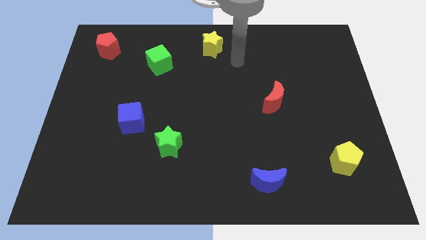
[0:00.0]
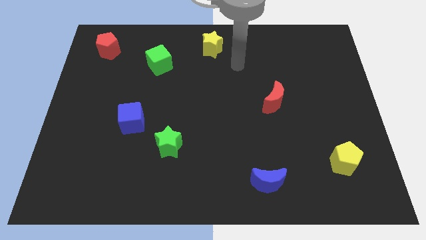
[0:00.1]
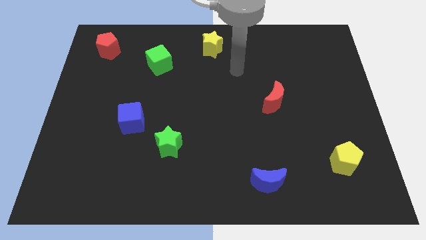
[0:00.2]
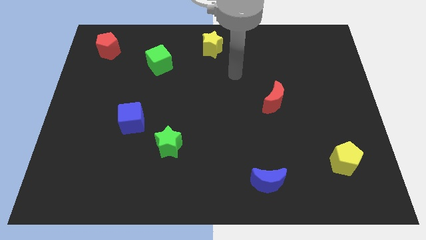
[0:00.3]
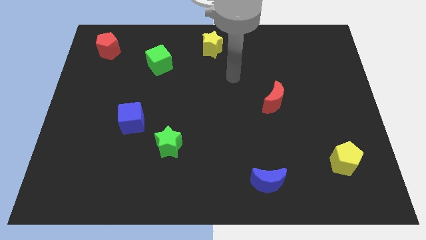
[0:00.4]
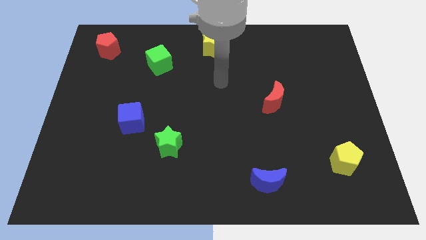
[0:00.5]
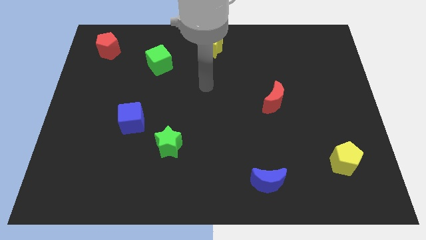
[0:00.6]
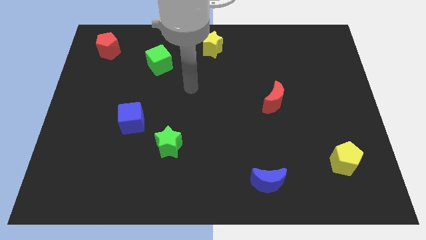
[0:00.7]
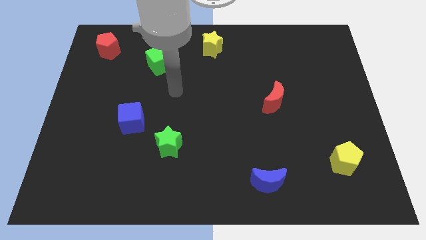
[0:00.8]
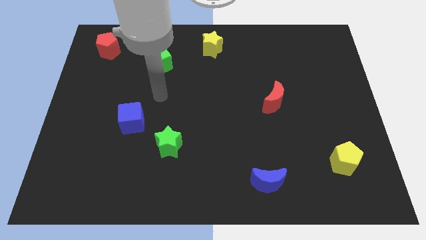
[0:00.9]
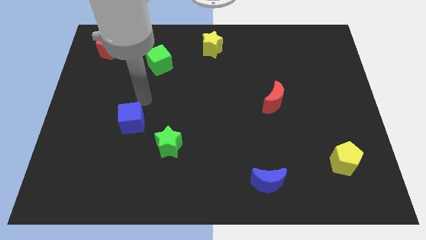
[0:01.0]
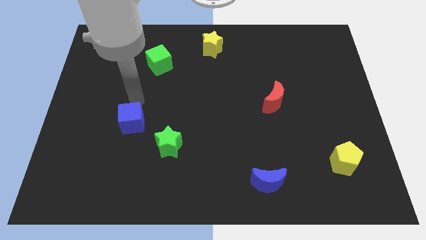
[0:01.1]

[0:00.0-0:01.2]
point the arm above the blue cube

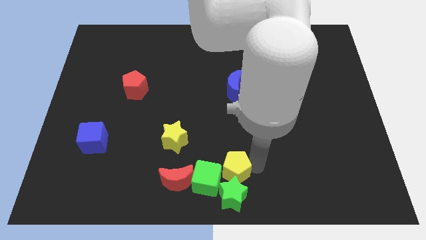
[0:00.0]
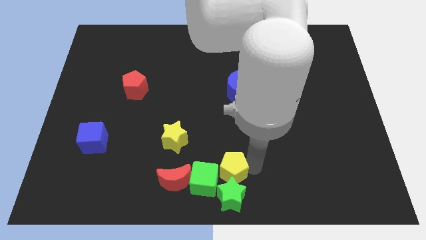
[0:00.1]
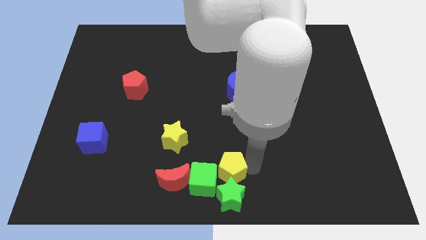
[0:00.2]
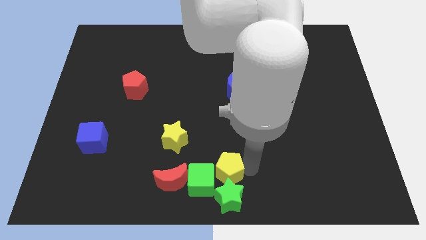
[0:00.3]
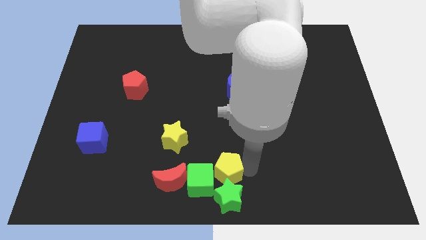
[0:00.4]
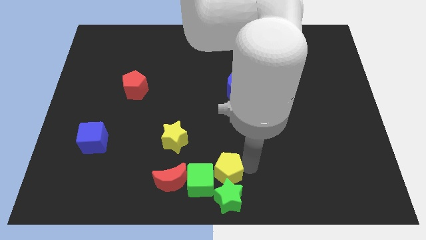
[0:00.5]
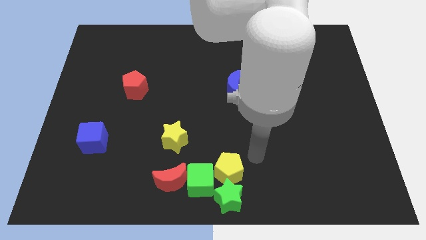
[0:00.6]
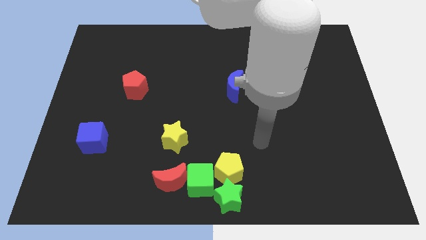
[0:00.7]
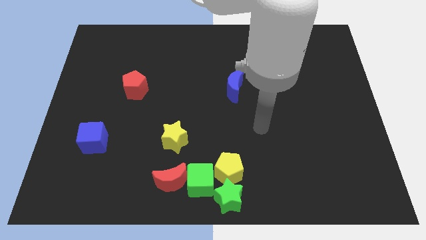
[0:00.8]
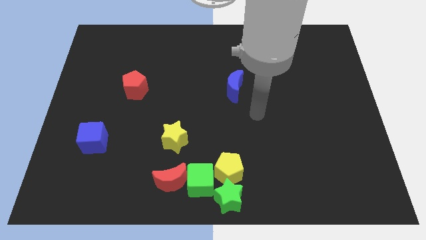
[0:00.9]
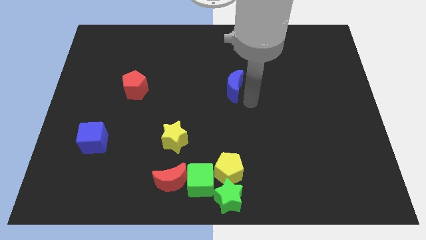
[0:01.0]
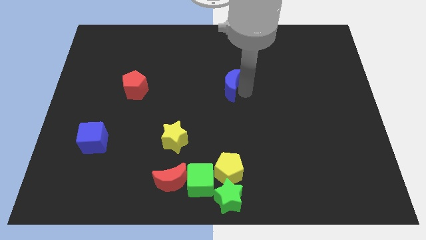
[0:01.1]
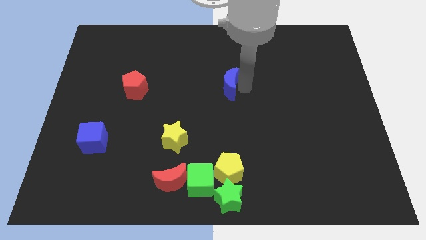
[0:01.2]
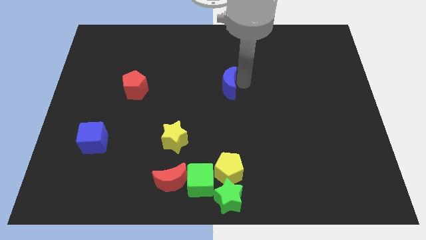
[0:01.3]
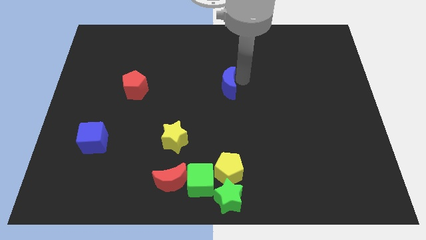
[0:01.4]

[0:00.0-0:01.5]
move the blue crescent slightly to the left

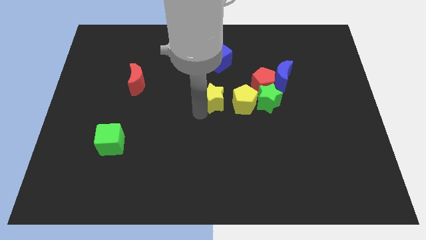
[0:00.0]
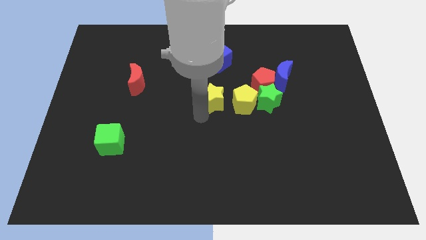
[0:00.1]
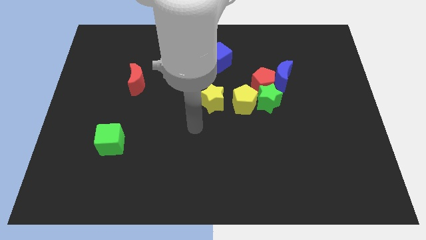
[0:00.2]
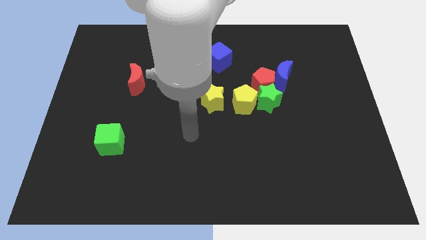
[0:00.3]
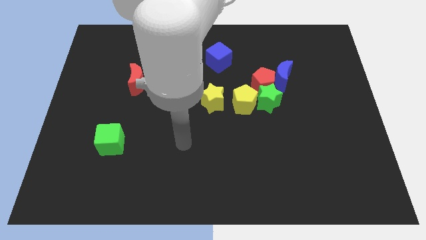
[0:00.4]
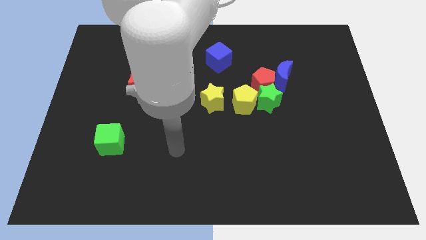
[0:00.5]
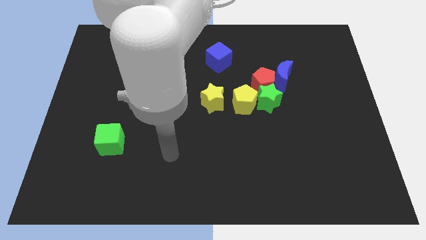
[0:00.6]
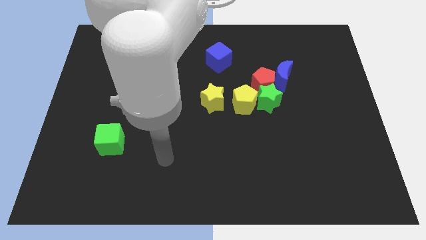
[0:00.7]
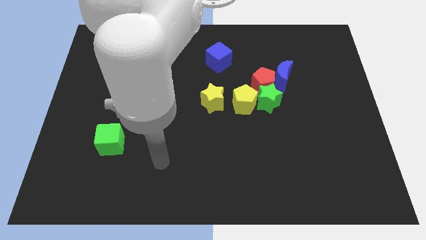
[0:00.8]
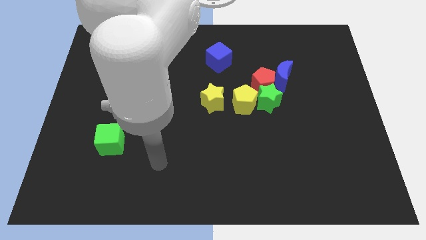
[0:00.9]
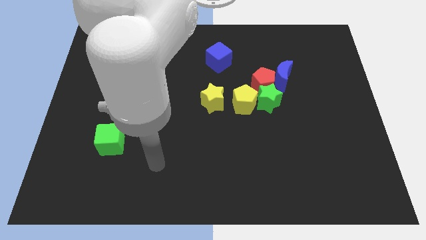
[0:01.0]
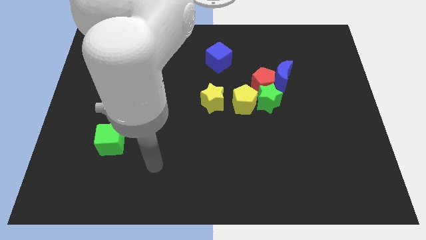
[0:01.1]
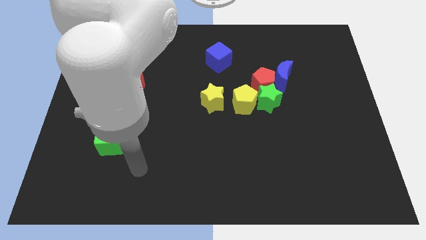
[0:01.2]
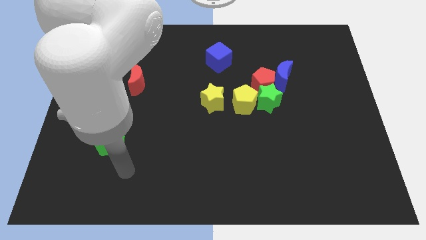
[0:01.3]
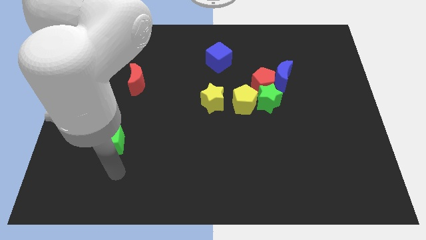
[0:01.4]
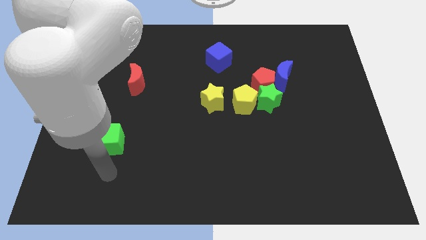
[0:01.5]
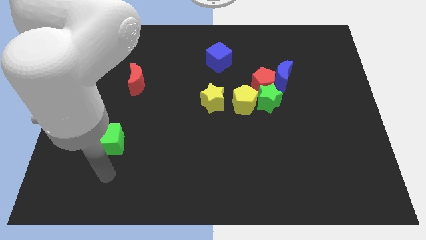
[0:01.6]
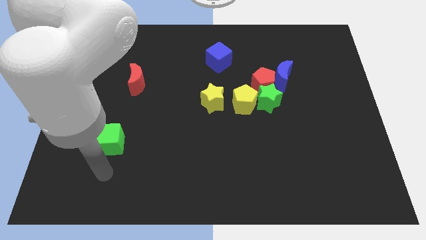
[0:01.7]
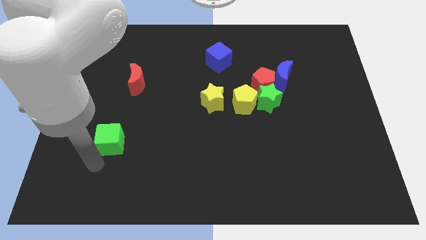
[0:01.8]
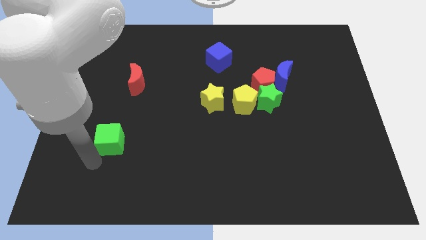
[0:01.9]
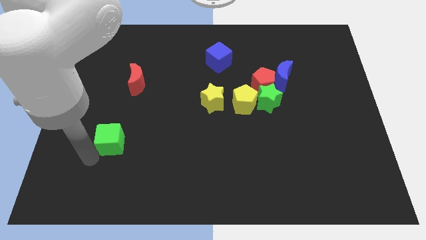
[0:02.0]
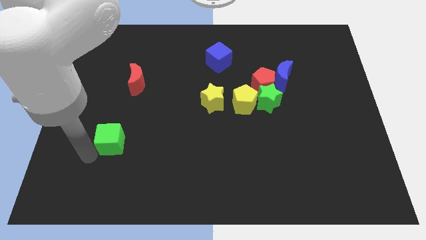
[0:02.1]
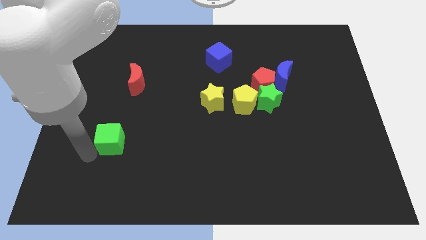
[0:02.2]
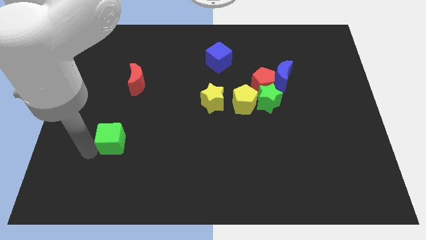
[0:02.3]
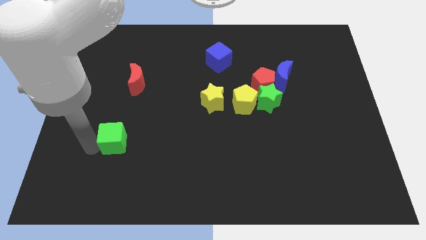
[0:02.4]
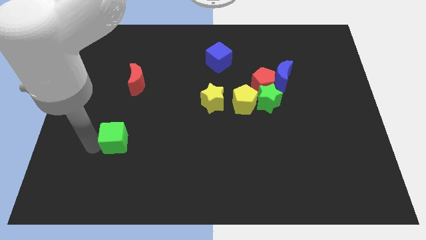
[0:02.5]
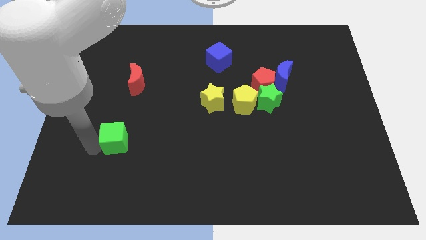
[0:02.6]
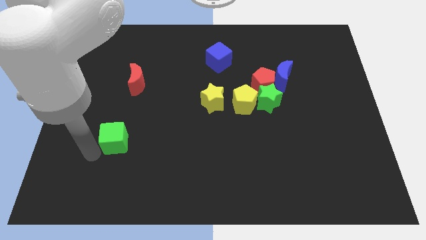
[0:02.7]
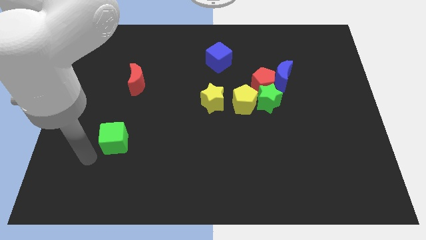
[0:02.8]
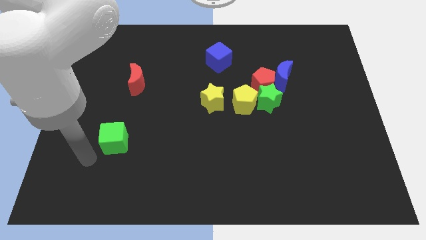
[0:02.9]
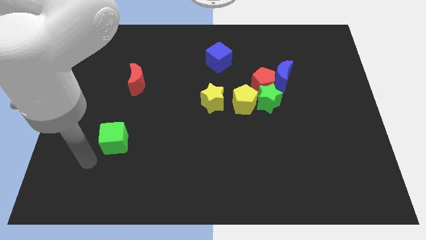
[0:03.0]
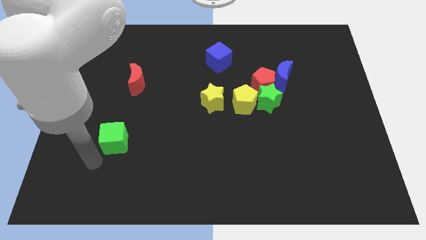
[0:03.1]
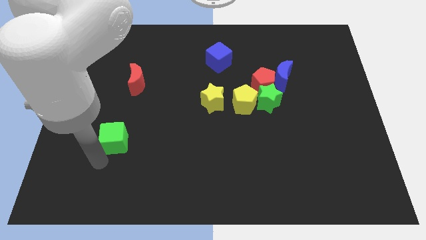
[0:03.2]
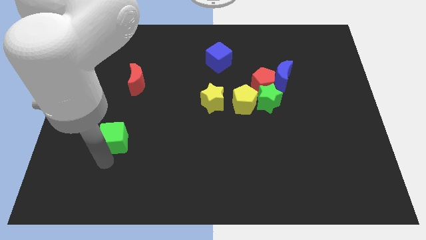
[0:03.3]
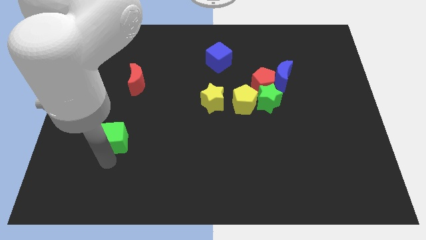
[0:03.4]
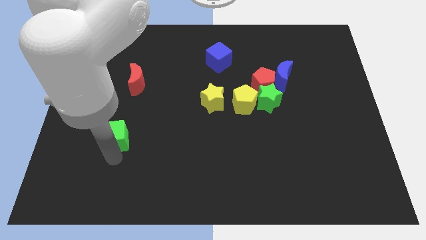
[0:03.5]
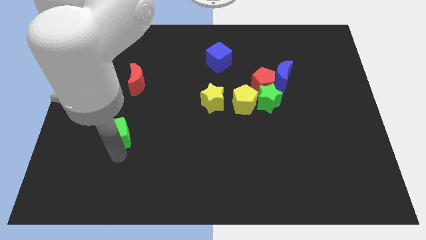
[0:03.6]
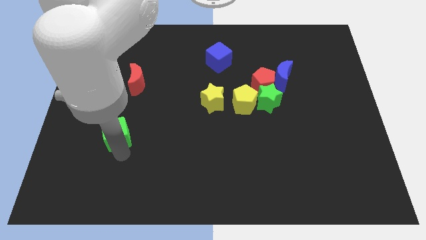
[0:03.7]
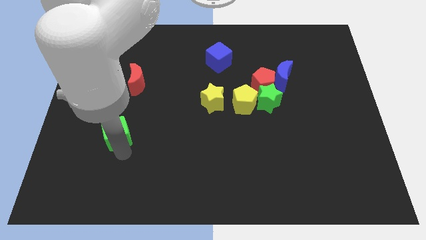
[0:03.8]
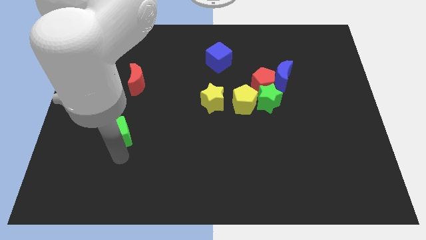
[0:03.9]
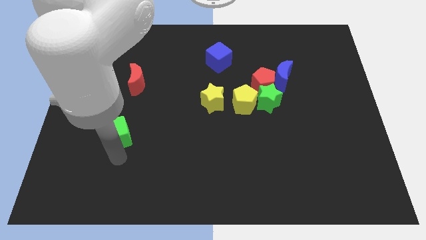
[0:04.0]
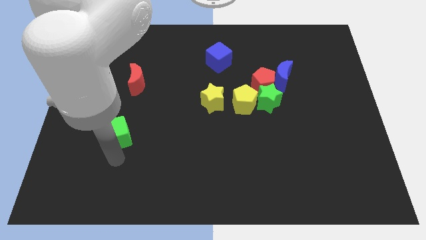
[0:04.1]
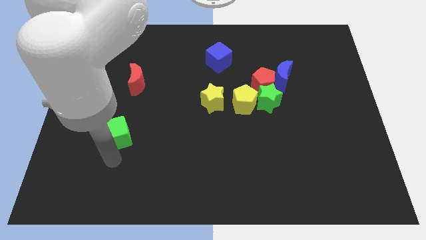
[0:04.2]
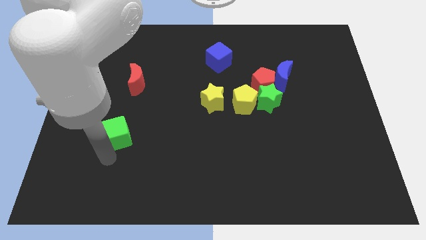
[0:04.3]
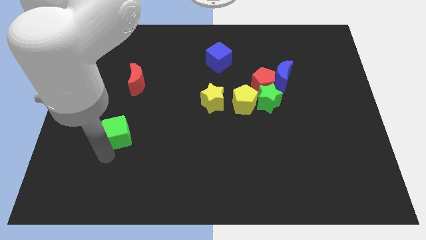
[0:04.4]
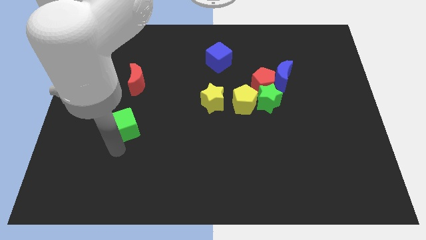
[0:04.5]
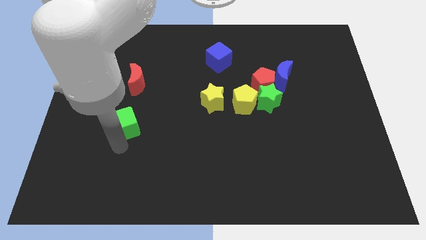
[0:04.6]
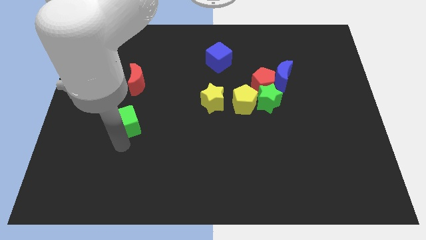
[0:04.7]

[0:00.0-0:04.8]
push the green cube towards the red crescent

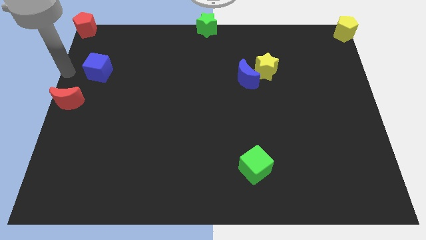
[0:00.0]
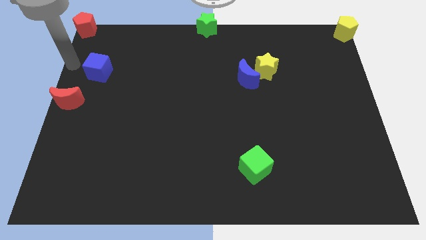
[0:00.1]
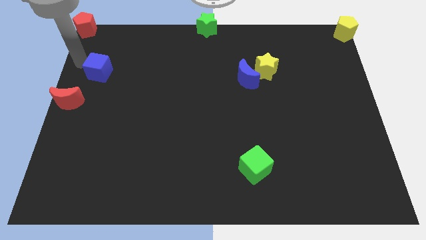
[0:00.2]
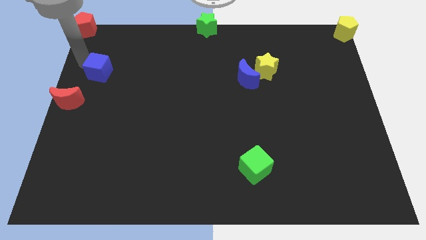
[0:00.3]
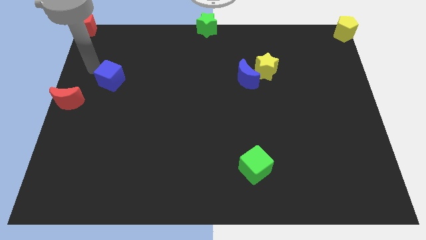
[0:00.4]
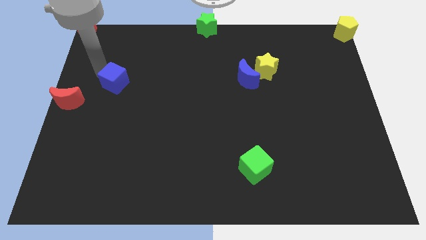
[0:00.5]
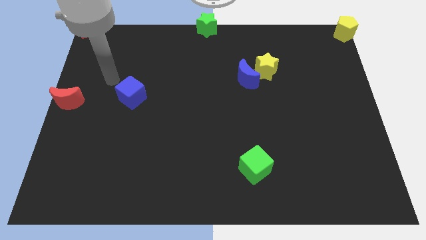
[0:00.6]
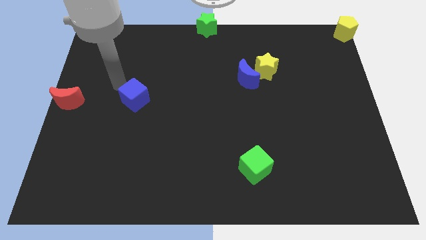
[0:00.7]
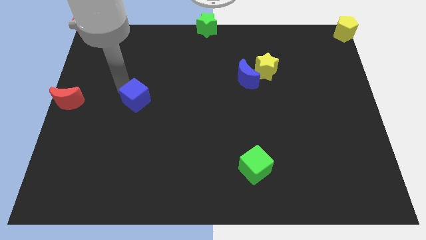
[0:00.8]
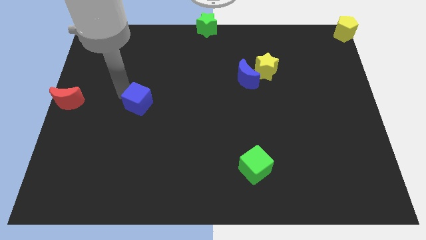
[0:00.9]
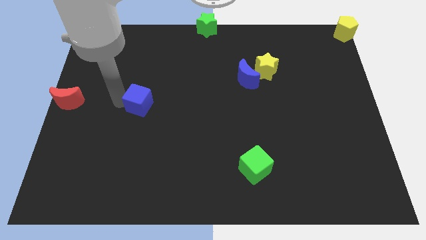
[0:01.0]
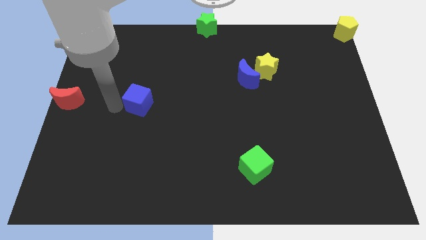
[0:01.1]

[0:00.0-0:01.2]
push the blue cube parallel to the red crescent

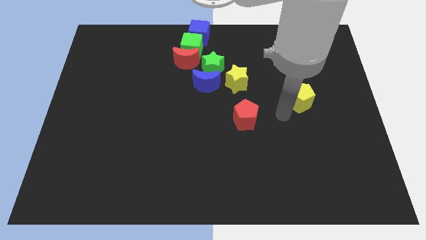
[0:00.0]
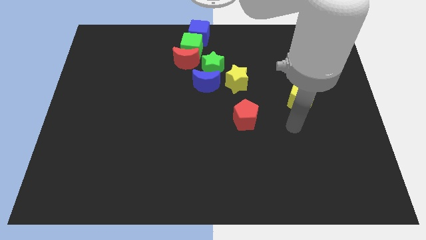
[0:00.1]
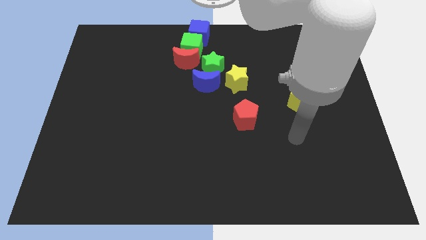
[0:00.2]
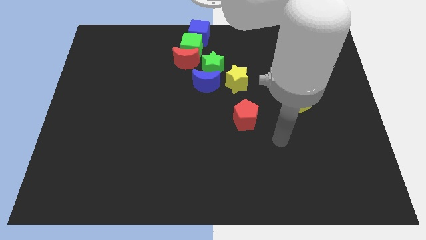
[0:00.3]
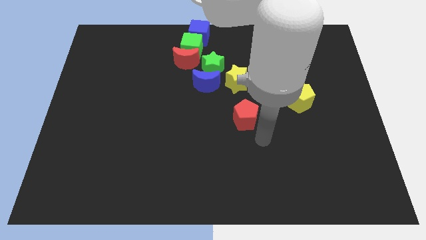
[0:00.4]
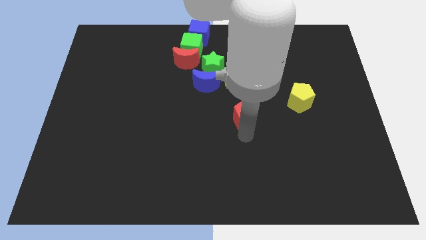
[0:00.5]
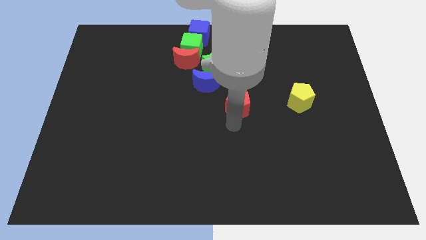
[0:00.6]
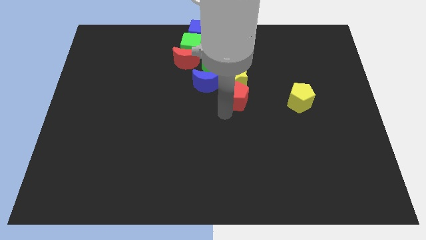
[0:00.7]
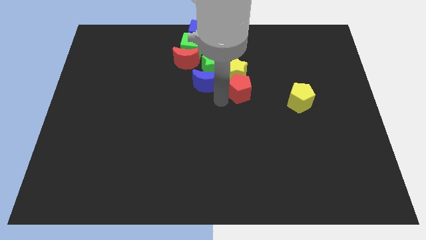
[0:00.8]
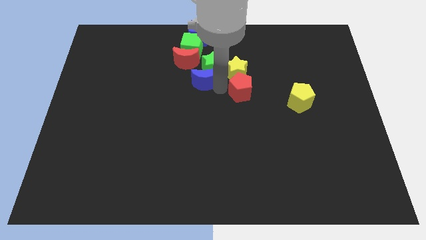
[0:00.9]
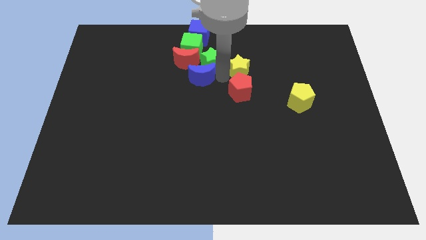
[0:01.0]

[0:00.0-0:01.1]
push the red pentagon into the yellow star
